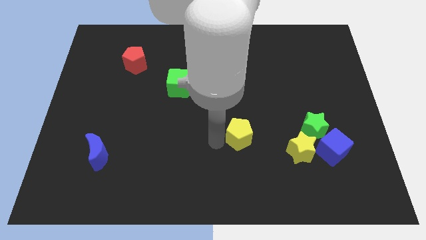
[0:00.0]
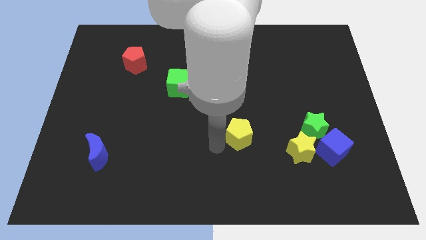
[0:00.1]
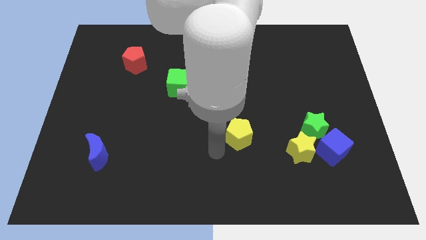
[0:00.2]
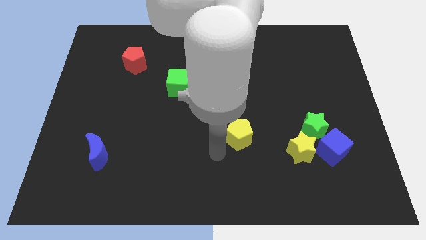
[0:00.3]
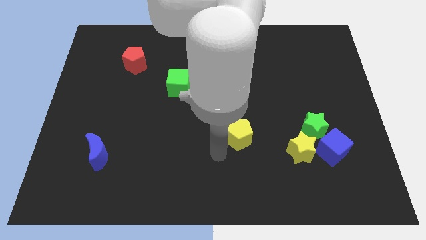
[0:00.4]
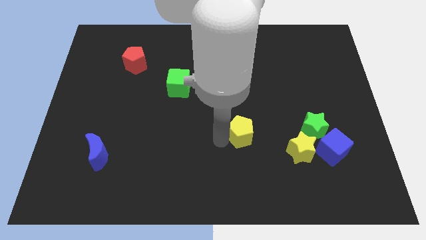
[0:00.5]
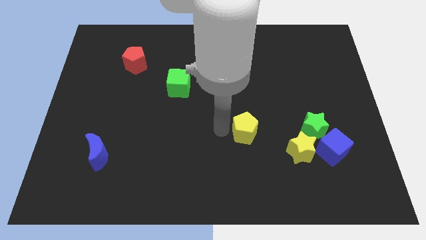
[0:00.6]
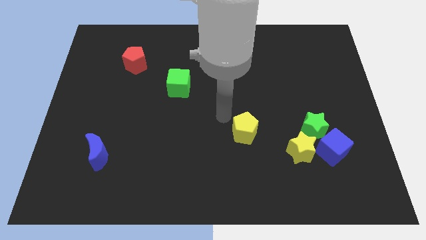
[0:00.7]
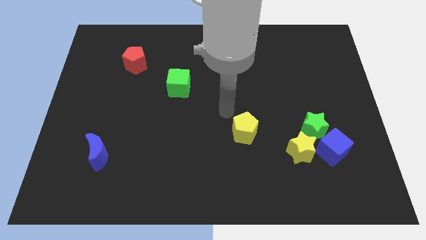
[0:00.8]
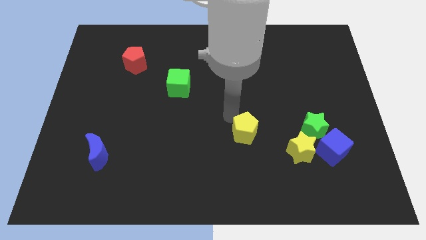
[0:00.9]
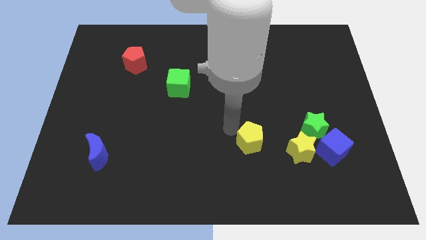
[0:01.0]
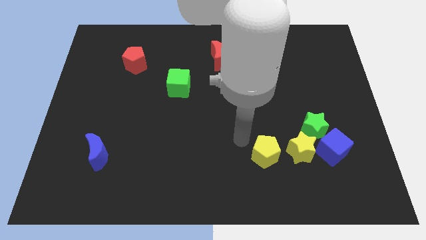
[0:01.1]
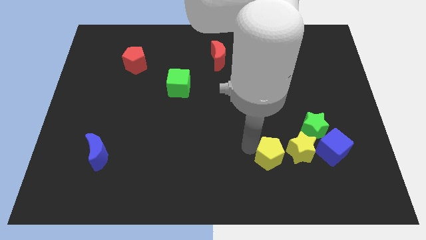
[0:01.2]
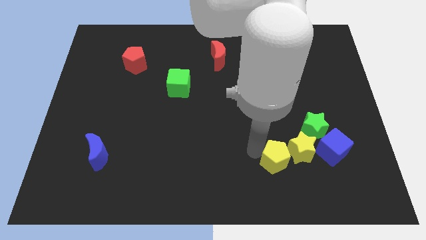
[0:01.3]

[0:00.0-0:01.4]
place the yellow pentagon left to the yellow star

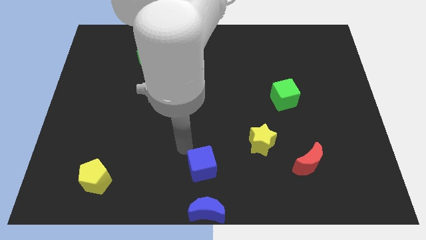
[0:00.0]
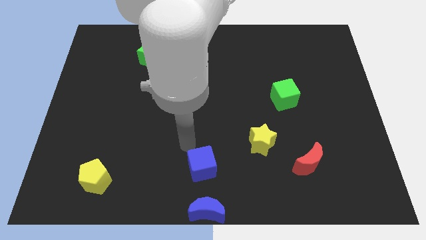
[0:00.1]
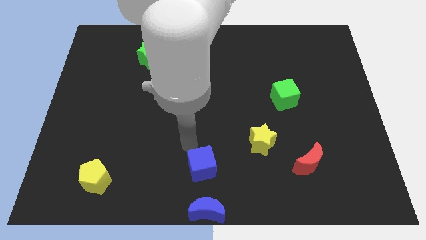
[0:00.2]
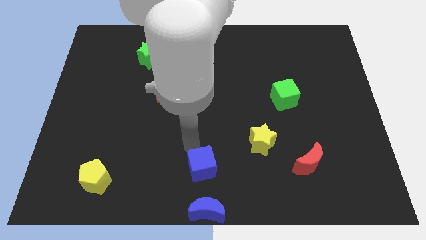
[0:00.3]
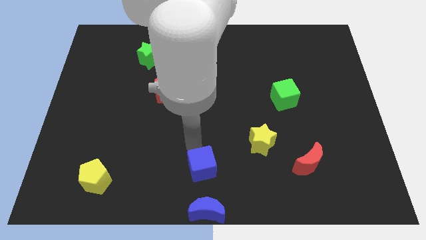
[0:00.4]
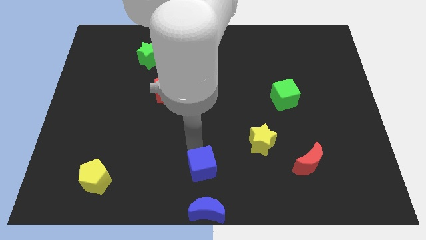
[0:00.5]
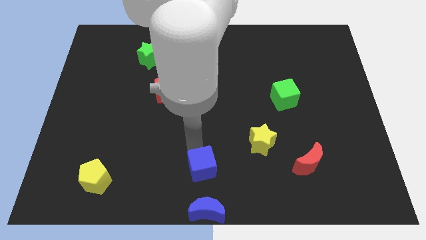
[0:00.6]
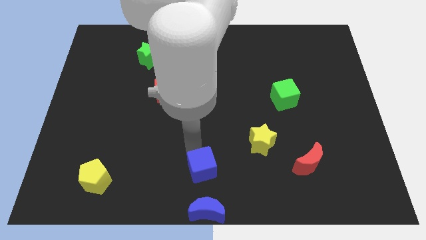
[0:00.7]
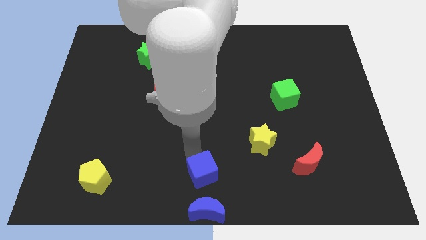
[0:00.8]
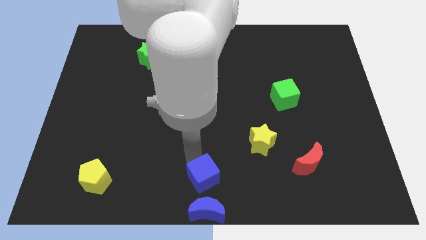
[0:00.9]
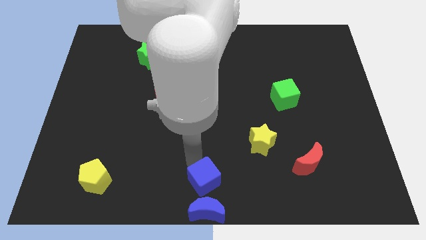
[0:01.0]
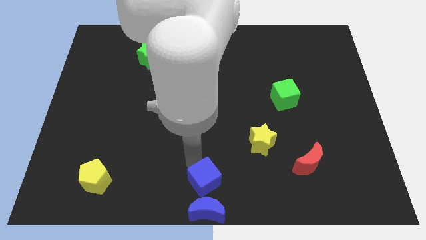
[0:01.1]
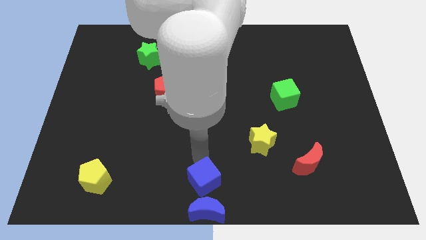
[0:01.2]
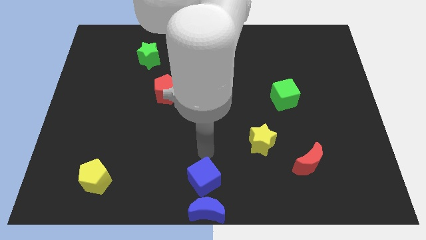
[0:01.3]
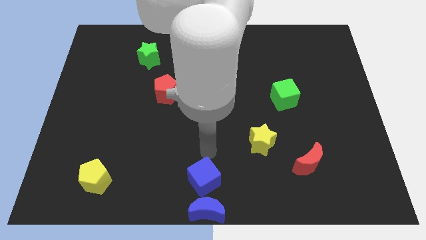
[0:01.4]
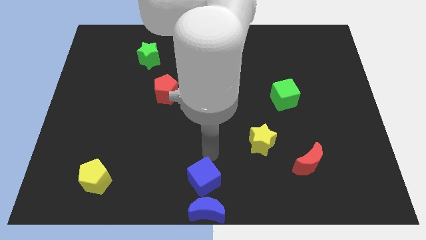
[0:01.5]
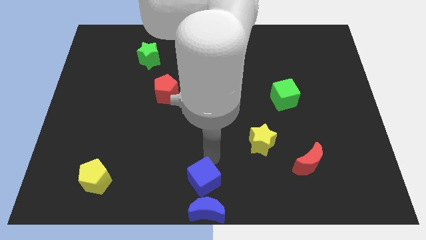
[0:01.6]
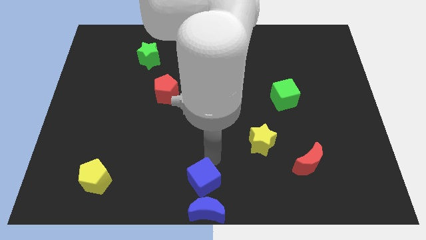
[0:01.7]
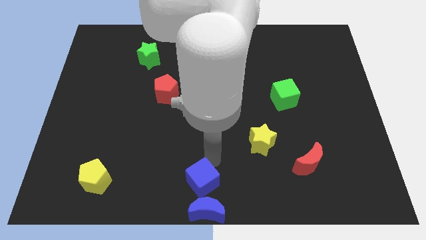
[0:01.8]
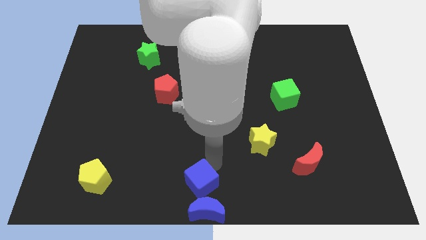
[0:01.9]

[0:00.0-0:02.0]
move the blue cube above the blue moon

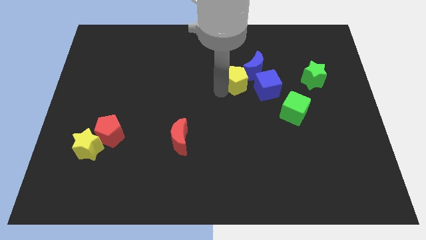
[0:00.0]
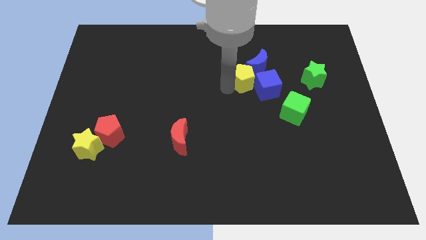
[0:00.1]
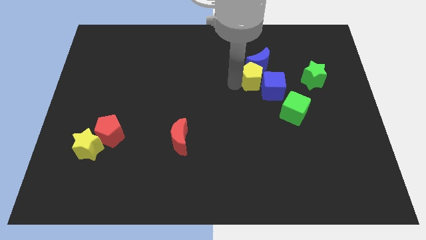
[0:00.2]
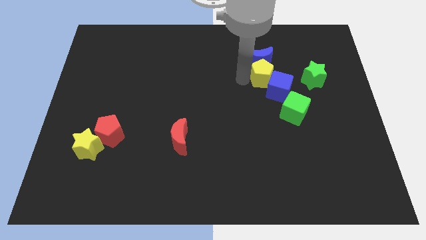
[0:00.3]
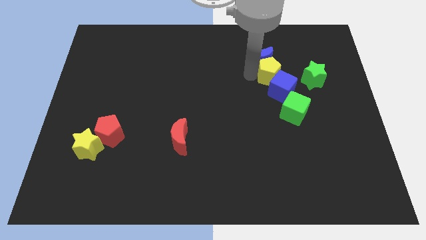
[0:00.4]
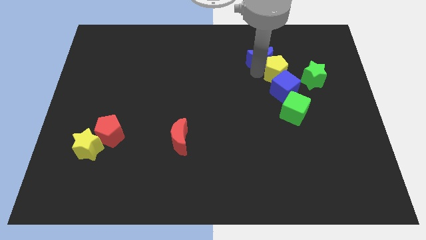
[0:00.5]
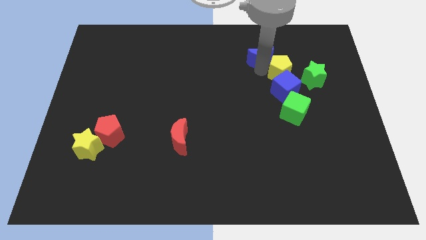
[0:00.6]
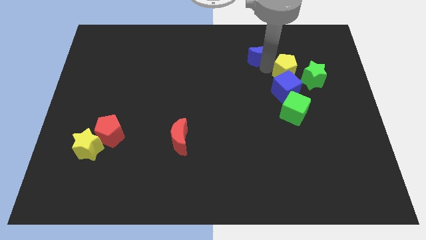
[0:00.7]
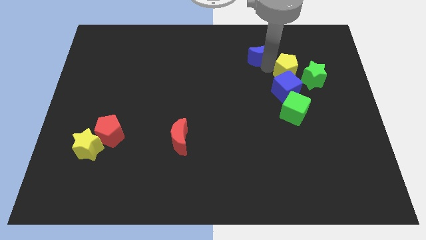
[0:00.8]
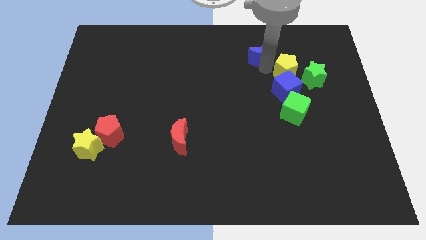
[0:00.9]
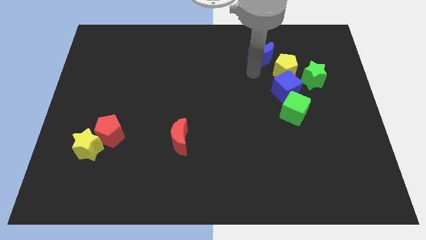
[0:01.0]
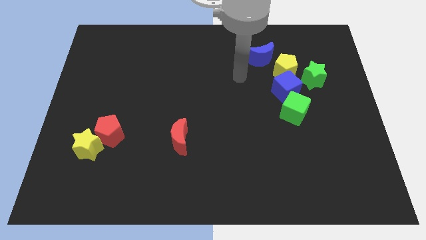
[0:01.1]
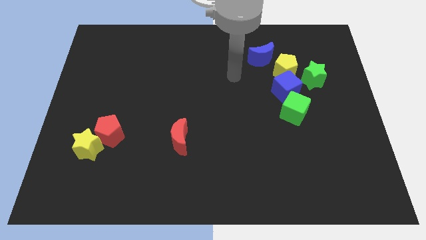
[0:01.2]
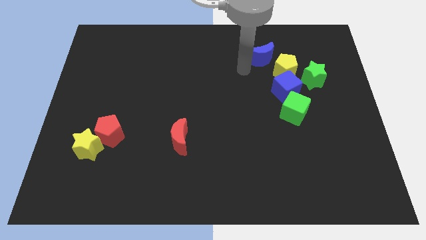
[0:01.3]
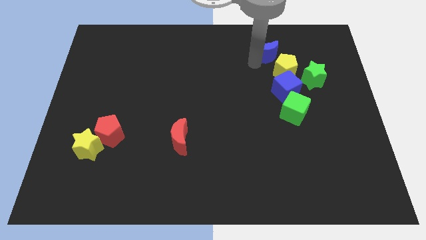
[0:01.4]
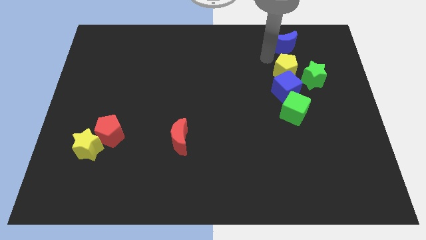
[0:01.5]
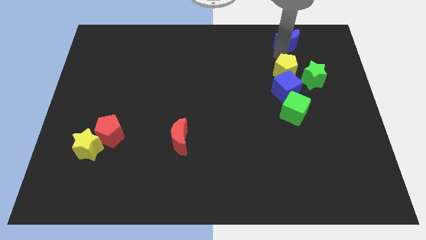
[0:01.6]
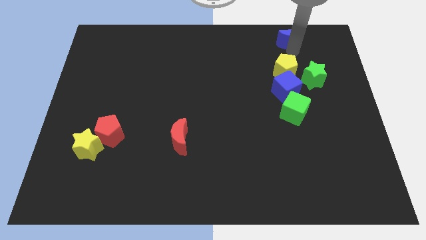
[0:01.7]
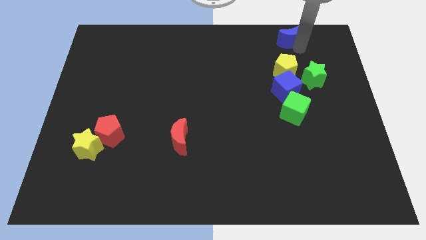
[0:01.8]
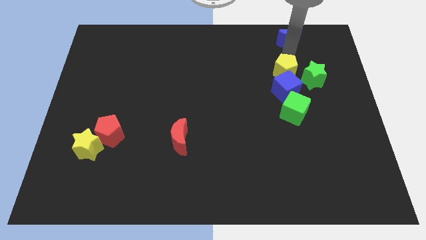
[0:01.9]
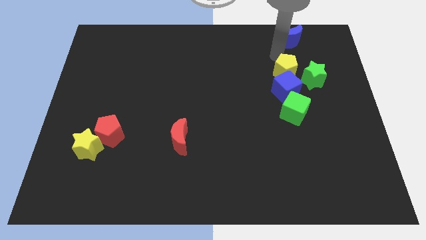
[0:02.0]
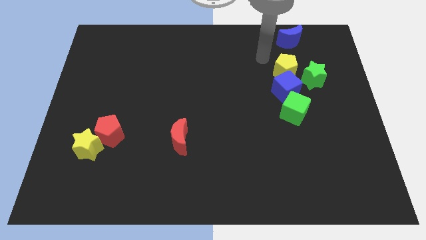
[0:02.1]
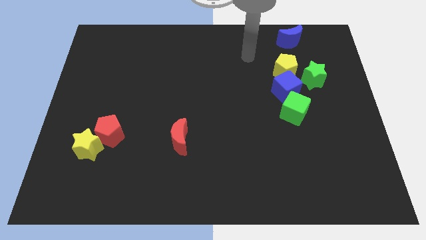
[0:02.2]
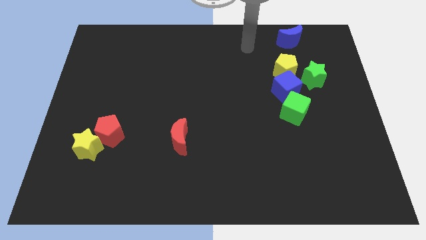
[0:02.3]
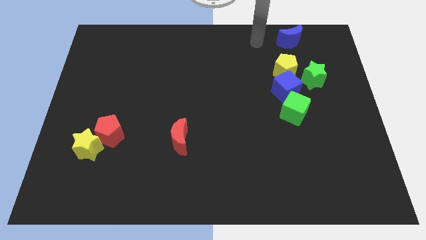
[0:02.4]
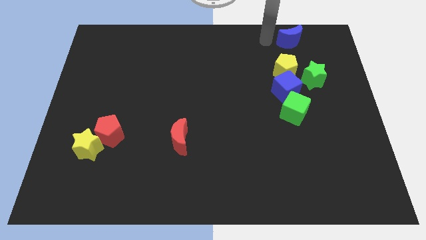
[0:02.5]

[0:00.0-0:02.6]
separate the blue crescent from the yellow pentagon towards the top side

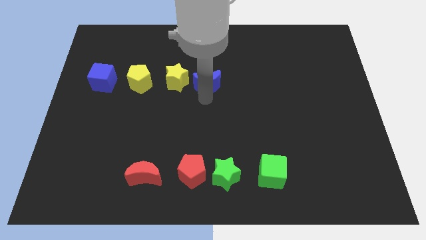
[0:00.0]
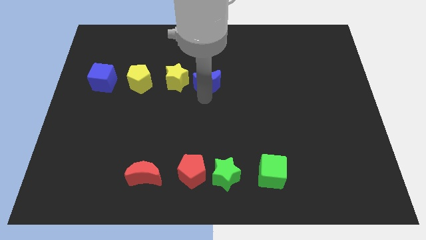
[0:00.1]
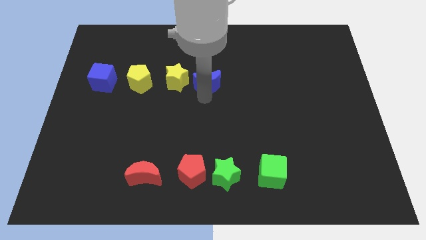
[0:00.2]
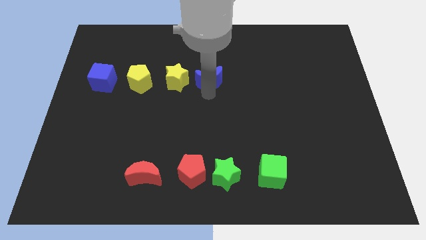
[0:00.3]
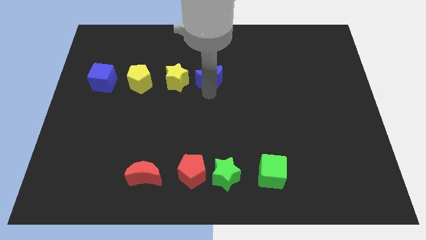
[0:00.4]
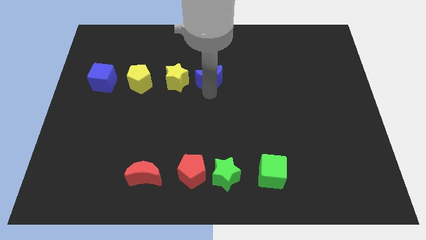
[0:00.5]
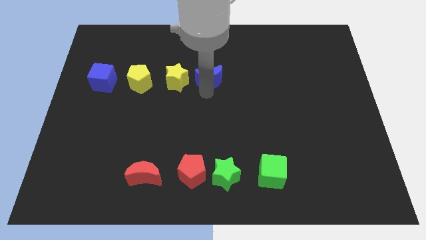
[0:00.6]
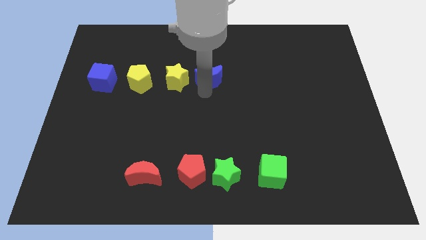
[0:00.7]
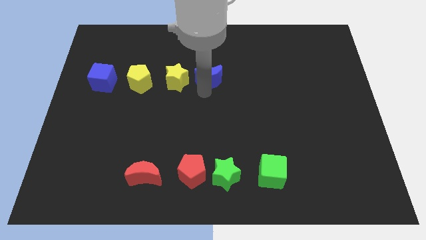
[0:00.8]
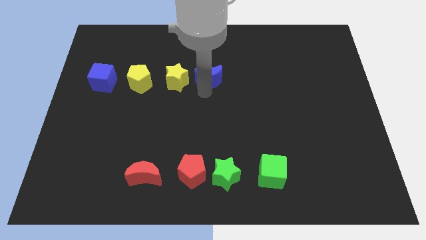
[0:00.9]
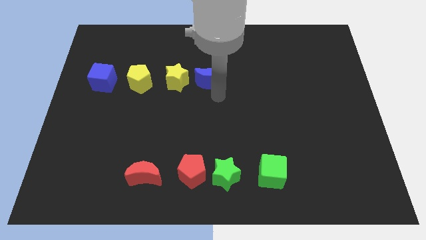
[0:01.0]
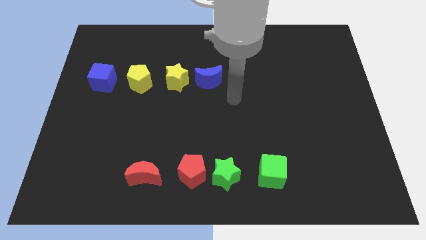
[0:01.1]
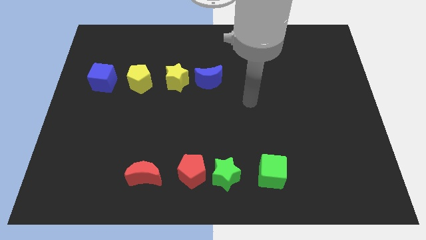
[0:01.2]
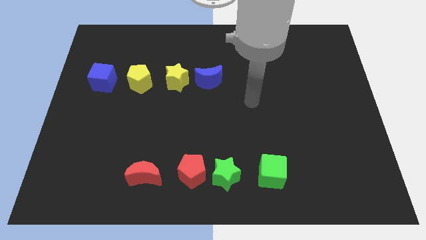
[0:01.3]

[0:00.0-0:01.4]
slightly push the blue moon upwards

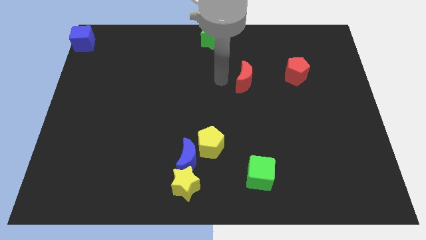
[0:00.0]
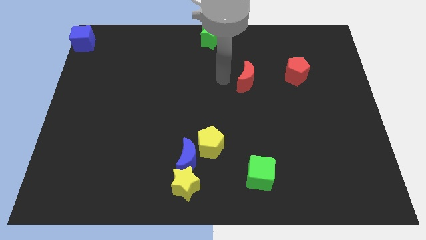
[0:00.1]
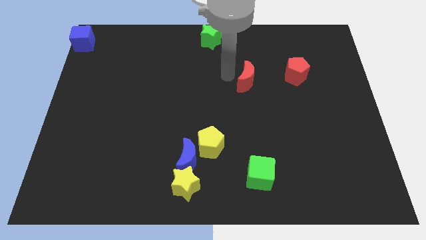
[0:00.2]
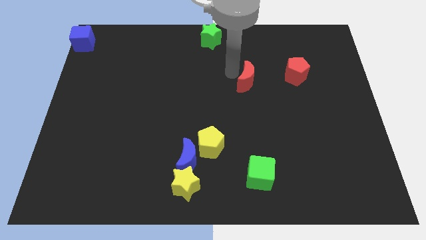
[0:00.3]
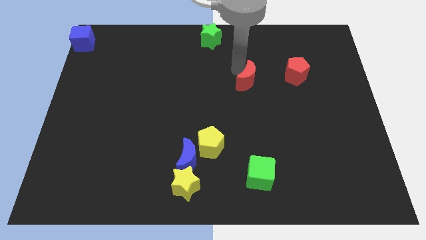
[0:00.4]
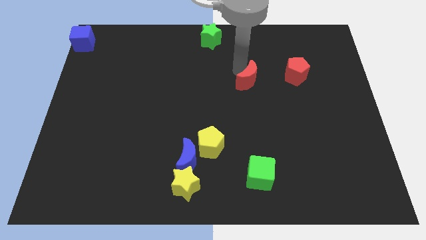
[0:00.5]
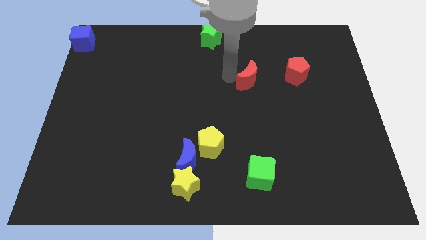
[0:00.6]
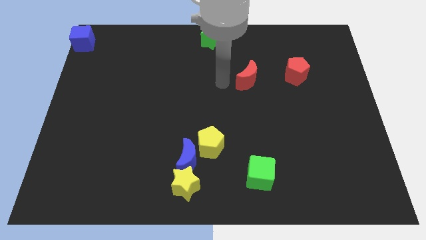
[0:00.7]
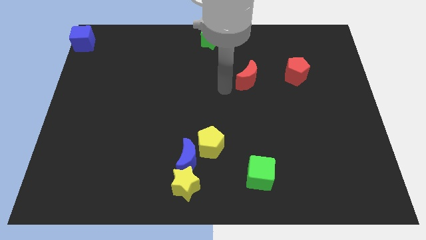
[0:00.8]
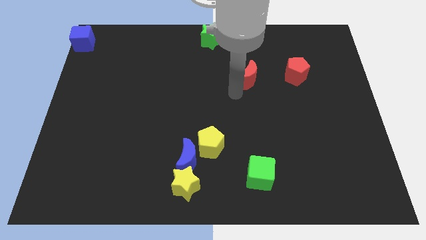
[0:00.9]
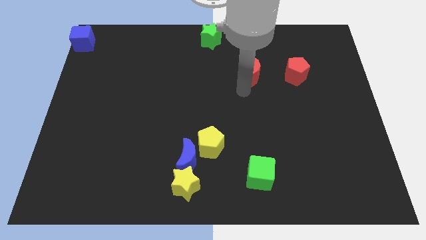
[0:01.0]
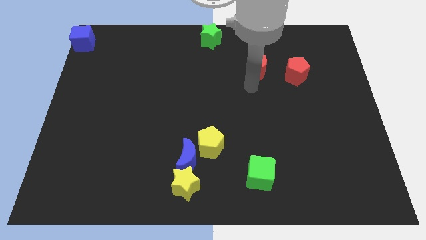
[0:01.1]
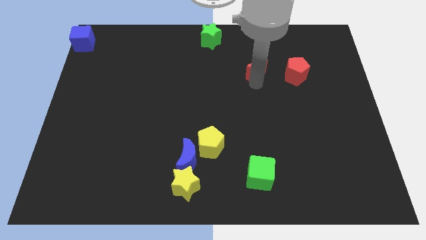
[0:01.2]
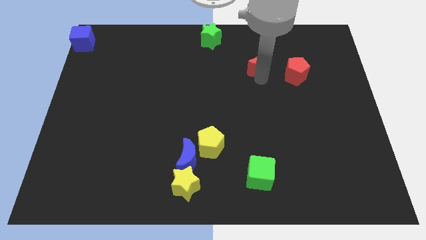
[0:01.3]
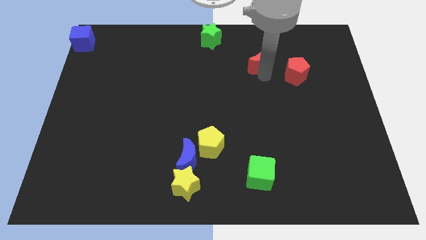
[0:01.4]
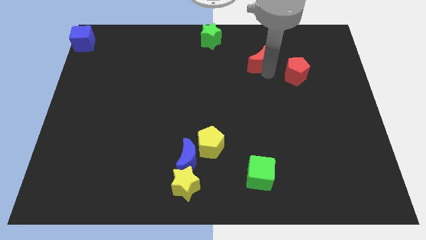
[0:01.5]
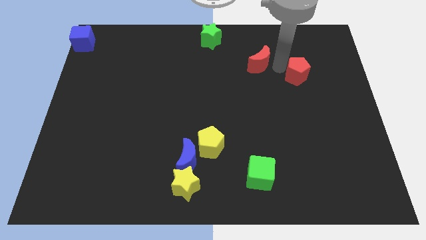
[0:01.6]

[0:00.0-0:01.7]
place the red crescent above the green cube
